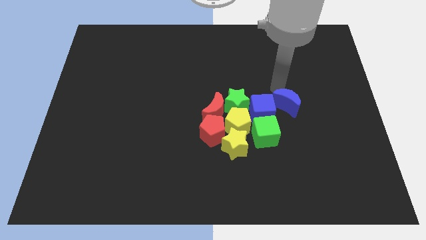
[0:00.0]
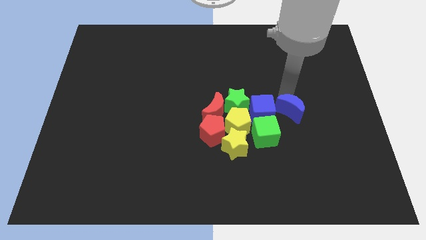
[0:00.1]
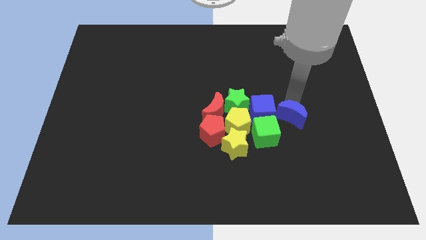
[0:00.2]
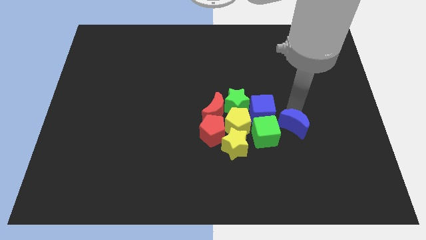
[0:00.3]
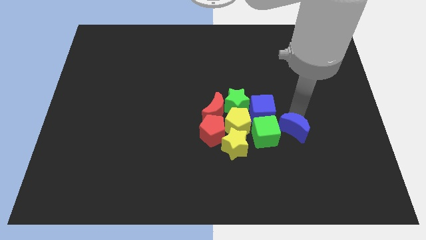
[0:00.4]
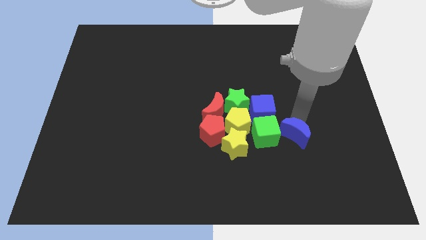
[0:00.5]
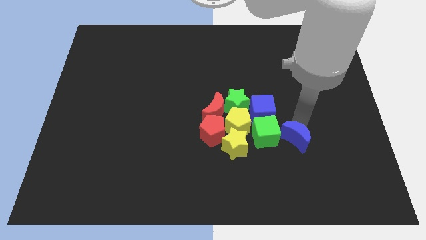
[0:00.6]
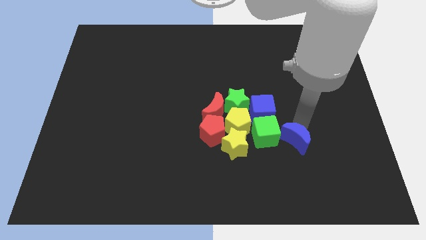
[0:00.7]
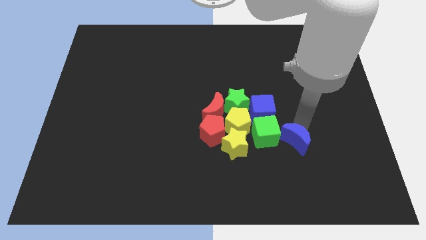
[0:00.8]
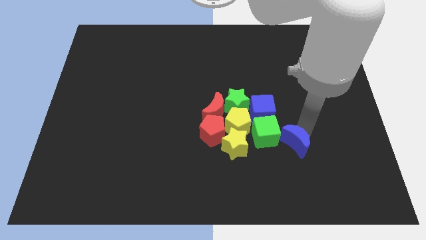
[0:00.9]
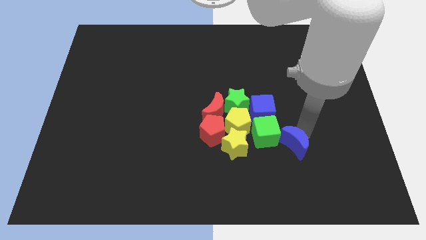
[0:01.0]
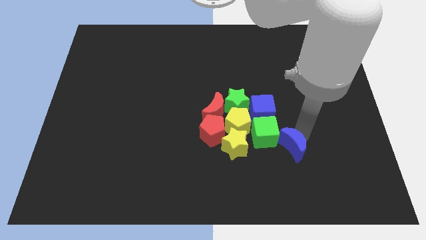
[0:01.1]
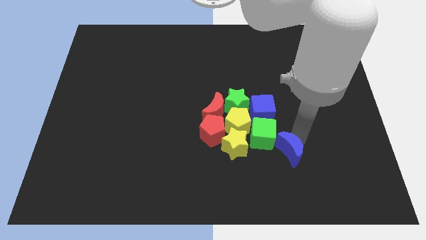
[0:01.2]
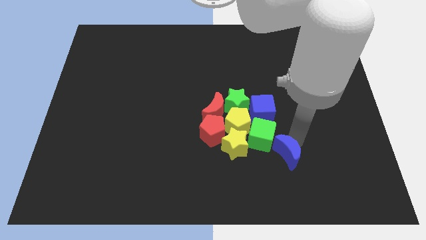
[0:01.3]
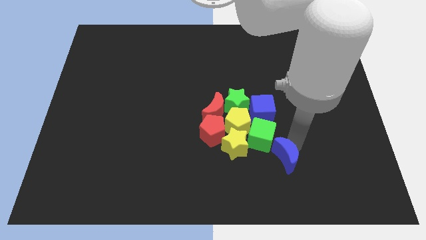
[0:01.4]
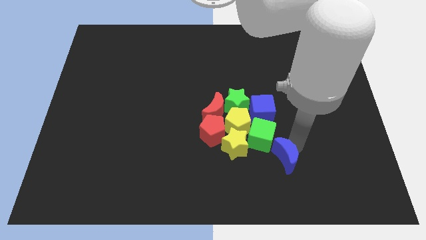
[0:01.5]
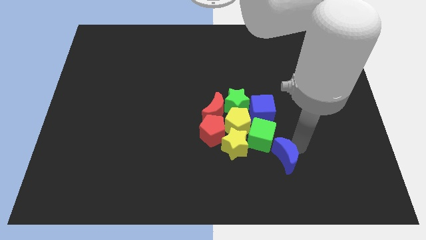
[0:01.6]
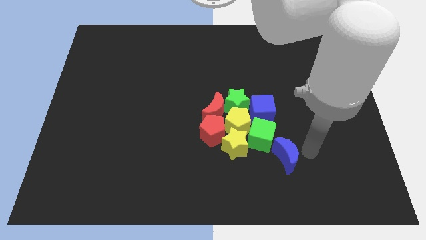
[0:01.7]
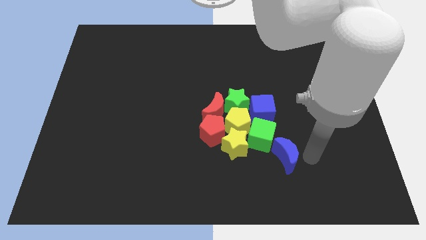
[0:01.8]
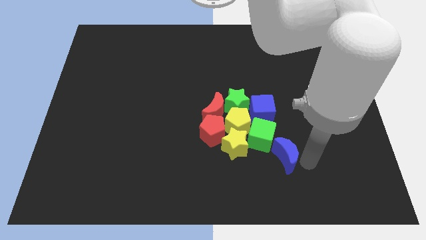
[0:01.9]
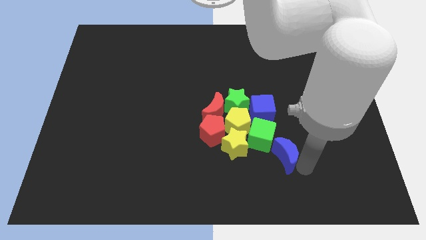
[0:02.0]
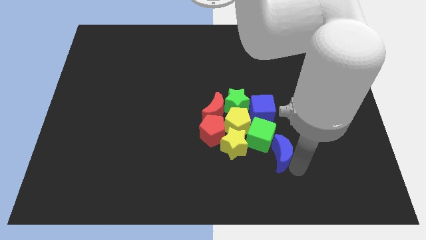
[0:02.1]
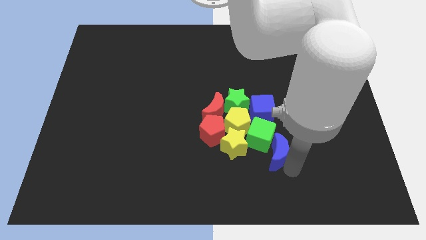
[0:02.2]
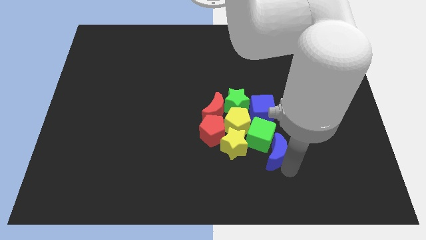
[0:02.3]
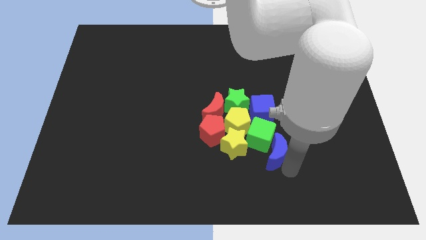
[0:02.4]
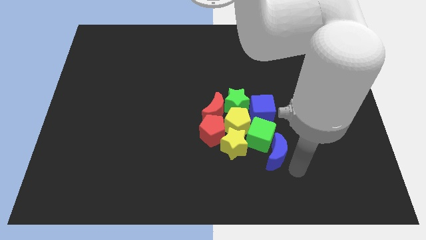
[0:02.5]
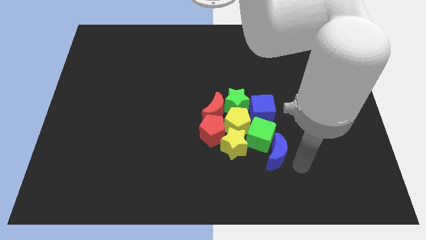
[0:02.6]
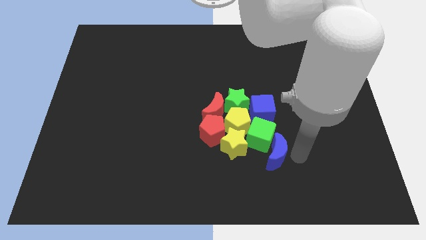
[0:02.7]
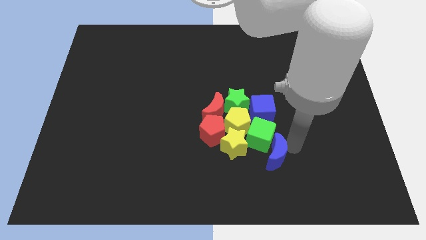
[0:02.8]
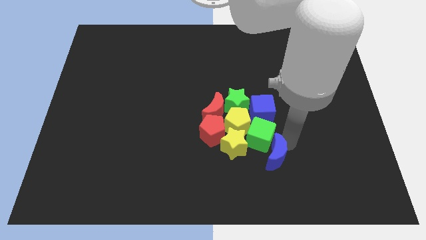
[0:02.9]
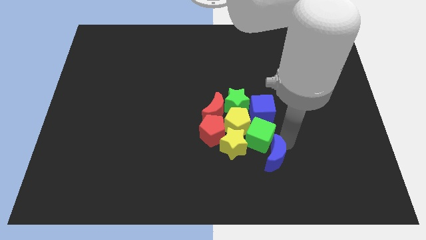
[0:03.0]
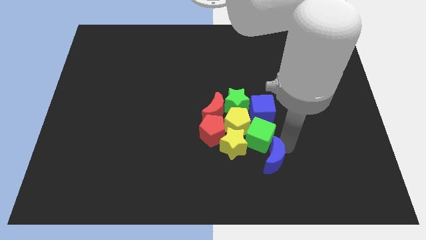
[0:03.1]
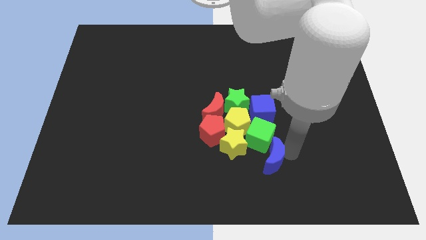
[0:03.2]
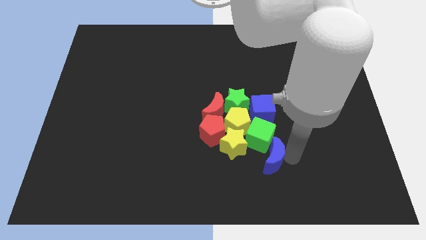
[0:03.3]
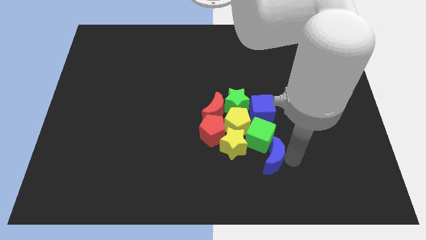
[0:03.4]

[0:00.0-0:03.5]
push the blue moon to the bottom right side of the green cube

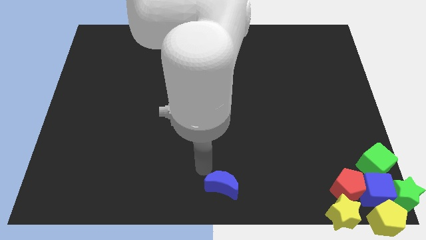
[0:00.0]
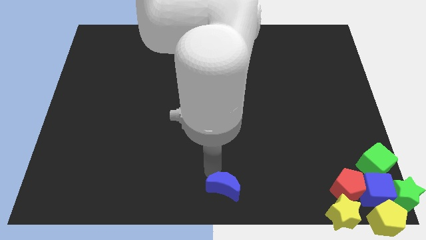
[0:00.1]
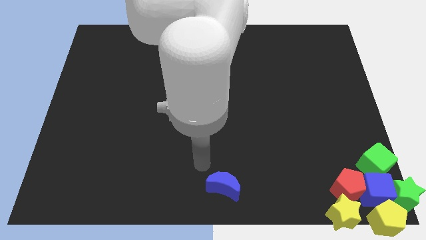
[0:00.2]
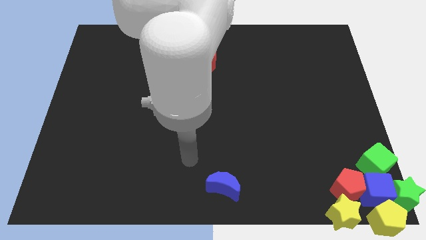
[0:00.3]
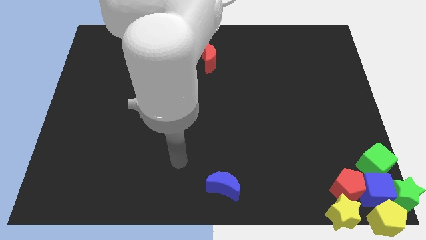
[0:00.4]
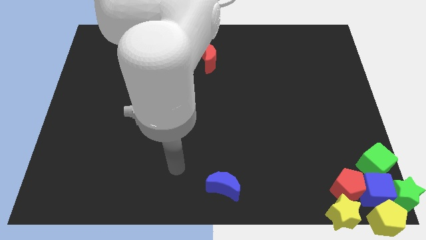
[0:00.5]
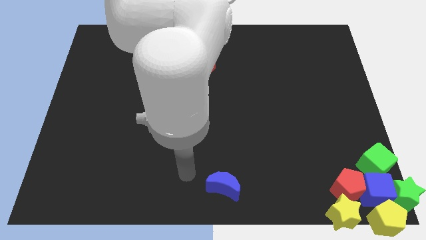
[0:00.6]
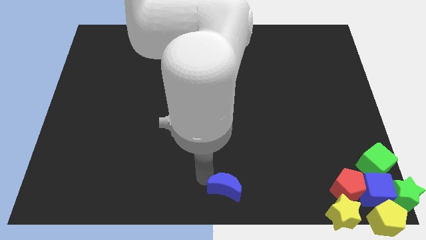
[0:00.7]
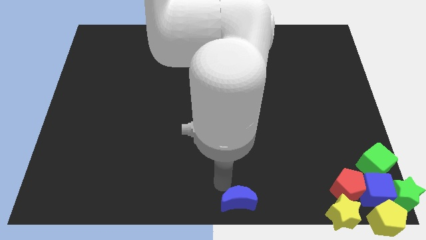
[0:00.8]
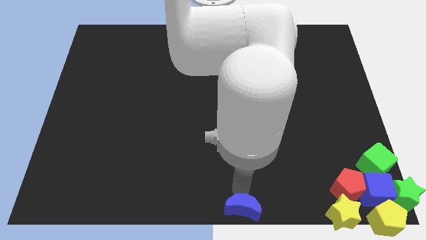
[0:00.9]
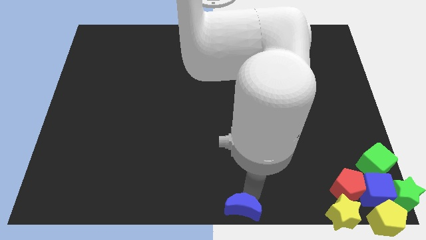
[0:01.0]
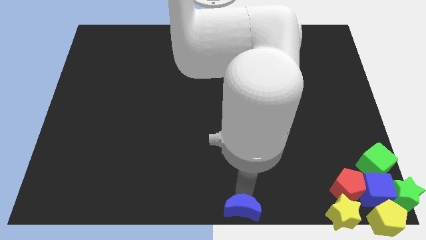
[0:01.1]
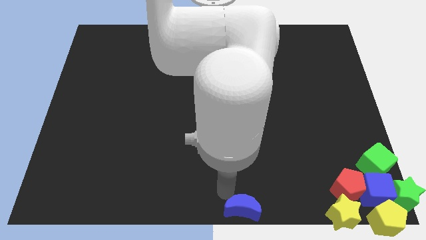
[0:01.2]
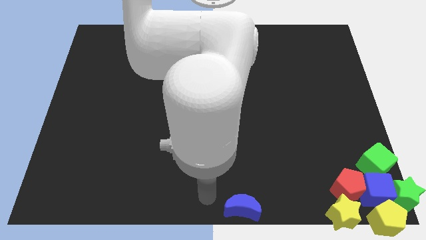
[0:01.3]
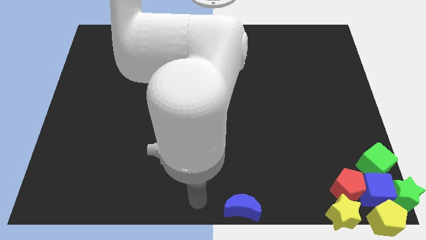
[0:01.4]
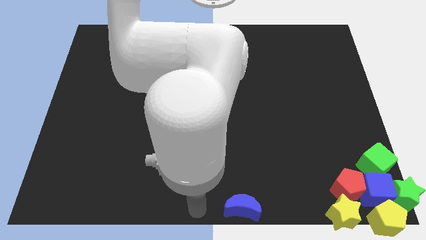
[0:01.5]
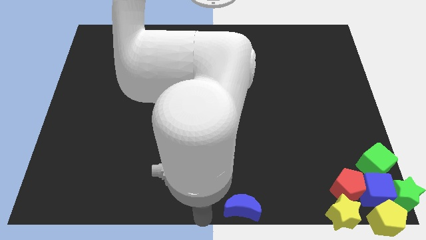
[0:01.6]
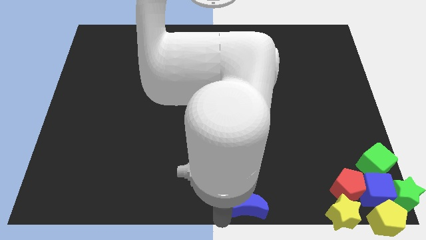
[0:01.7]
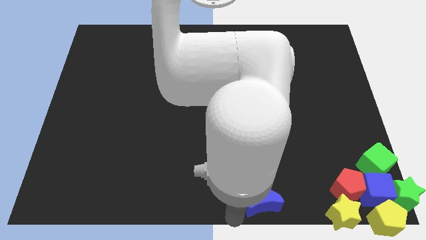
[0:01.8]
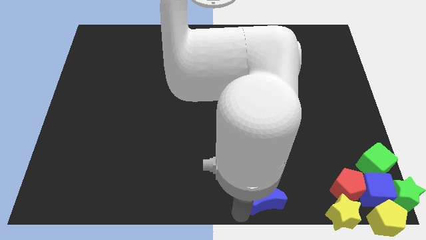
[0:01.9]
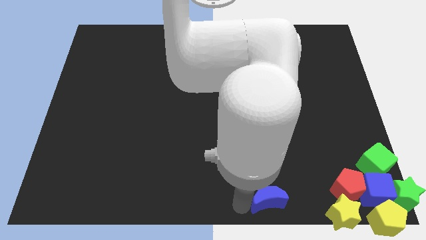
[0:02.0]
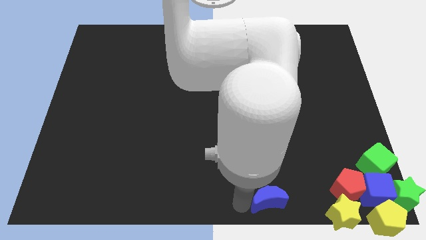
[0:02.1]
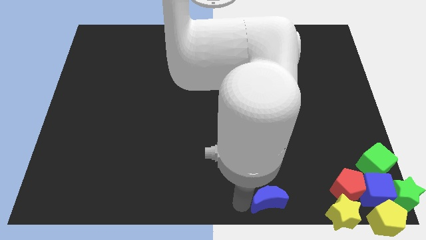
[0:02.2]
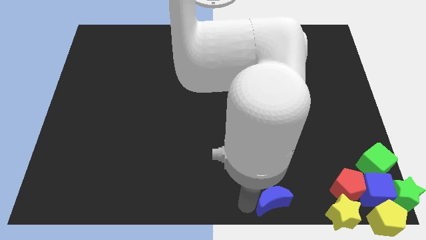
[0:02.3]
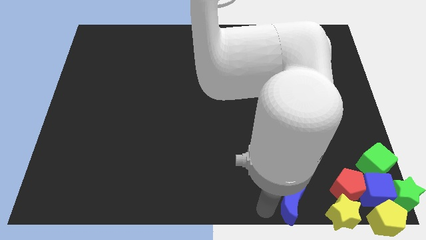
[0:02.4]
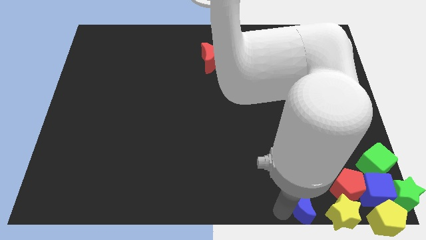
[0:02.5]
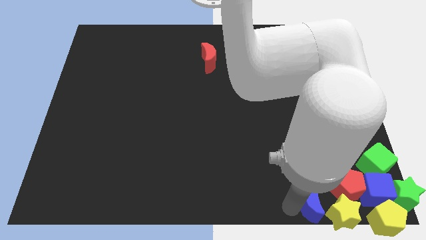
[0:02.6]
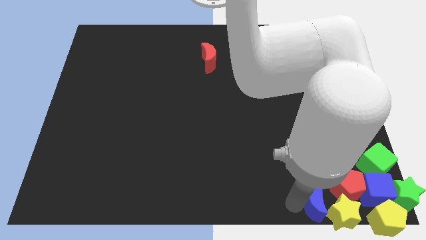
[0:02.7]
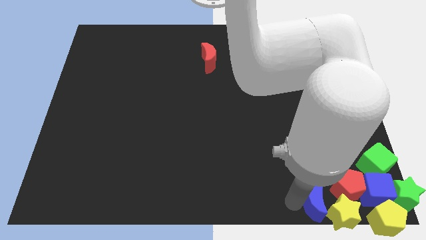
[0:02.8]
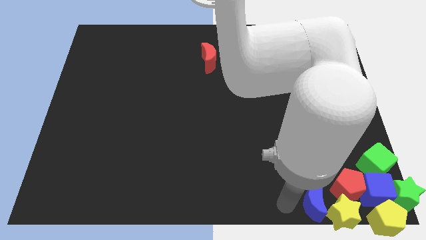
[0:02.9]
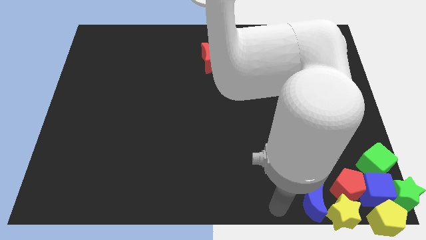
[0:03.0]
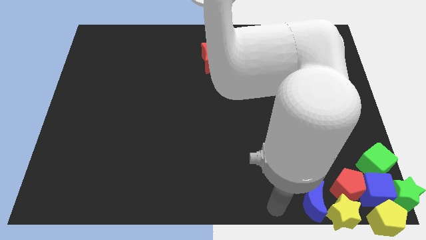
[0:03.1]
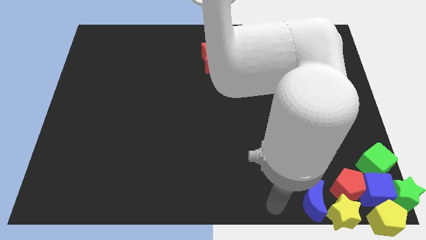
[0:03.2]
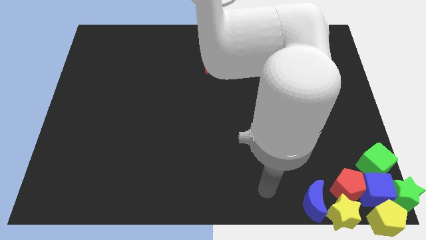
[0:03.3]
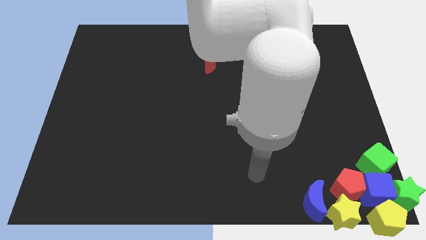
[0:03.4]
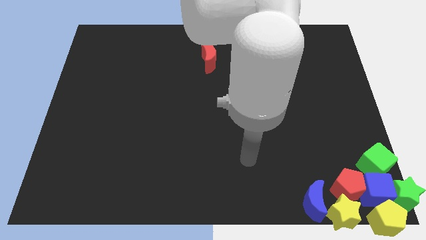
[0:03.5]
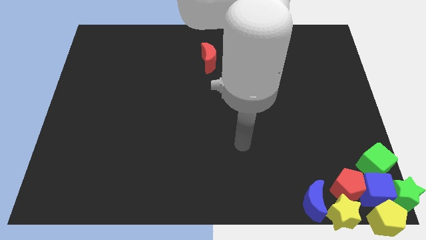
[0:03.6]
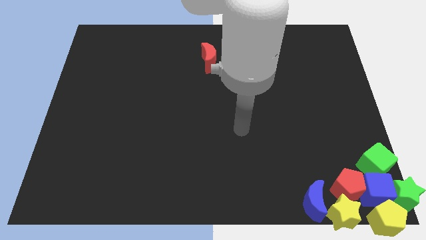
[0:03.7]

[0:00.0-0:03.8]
move the blue moon into the yellow star

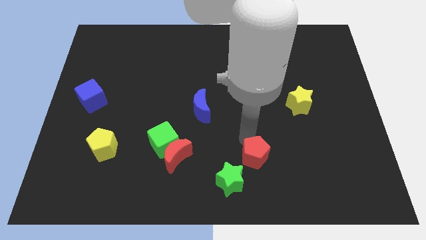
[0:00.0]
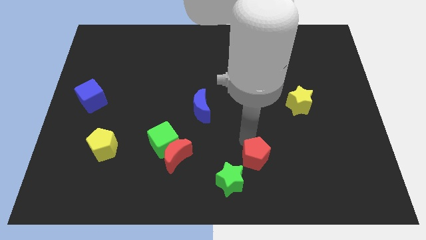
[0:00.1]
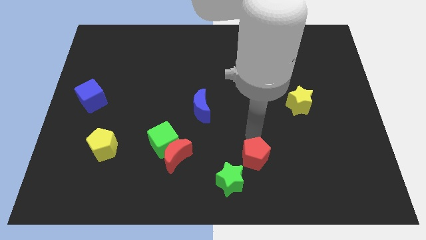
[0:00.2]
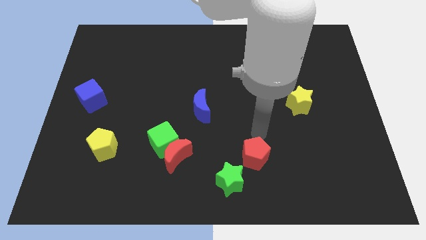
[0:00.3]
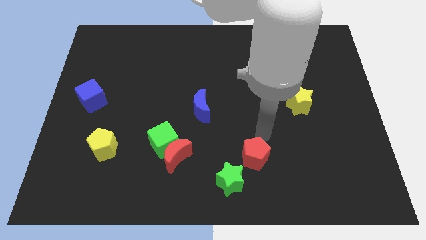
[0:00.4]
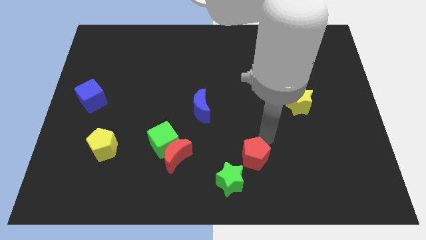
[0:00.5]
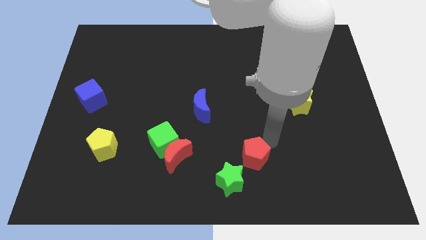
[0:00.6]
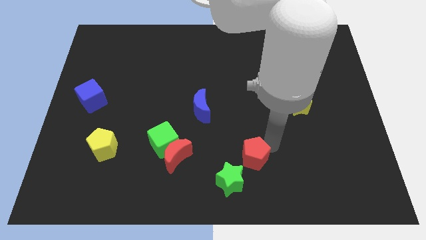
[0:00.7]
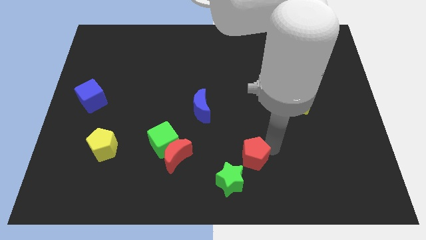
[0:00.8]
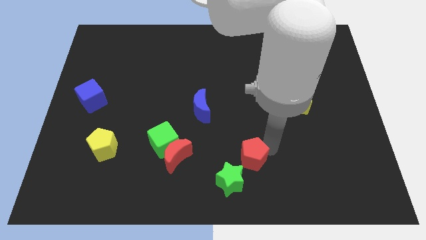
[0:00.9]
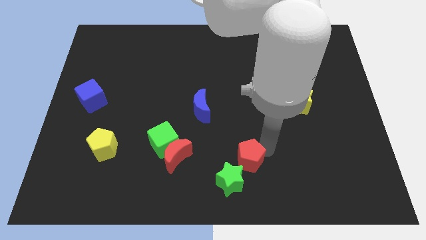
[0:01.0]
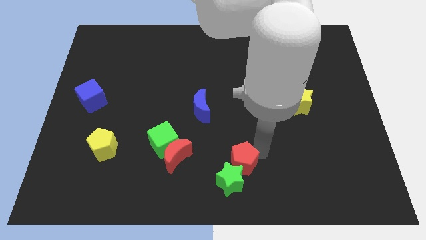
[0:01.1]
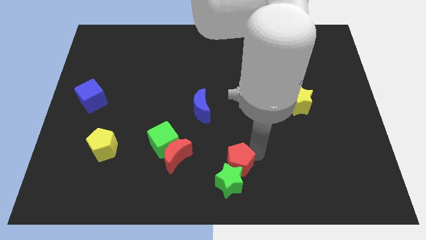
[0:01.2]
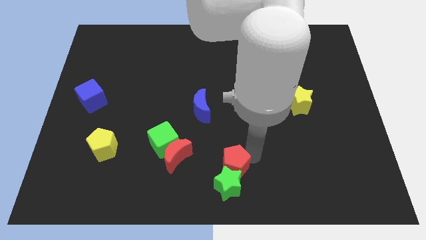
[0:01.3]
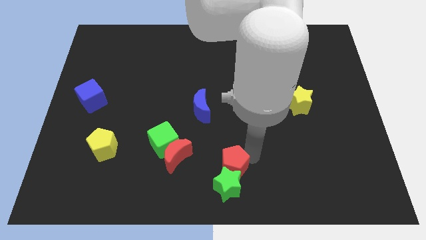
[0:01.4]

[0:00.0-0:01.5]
move red pentagon into green star
